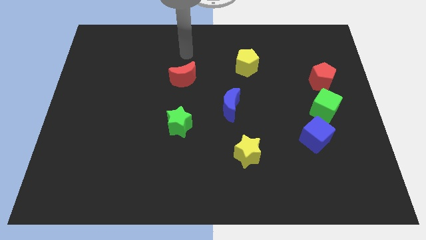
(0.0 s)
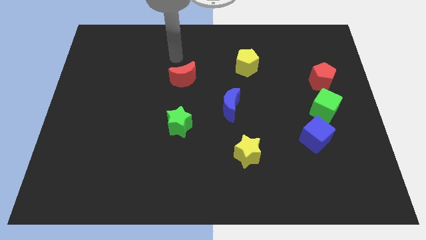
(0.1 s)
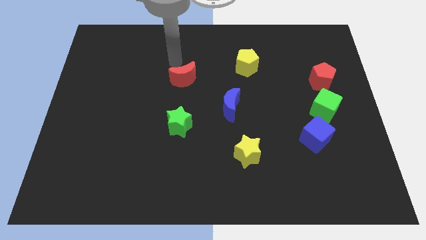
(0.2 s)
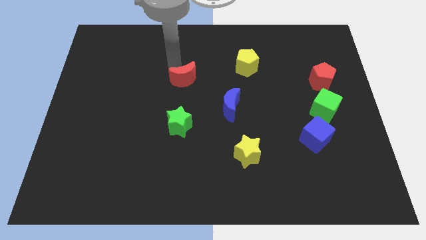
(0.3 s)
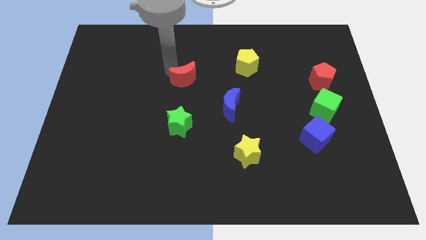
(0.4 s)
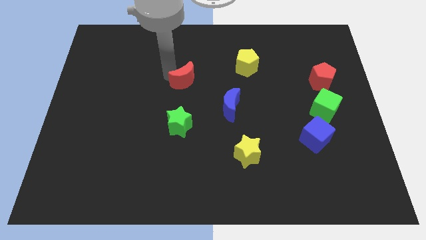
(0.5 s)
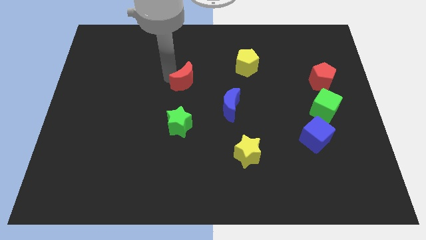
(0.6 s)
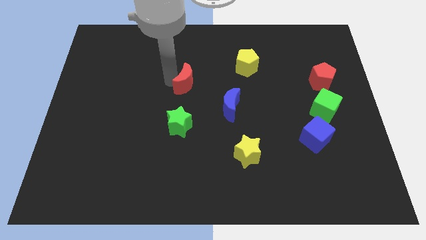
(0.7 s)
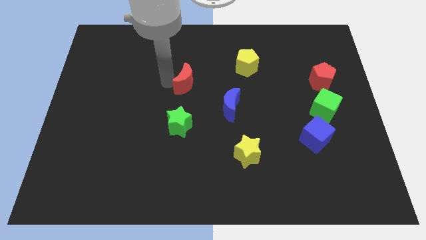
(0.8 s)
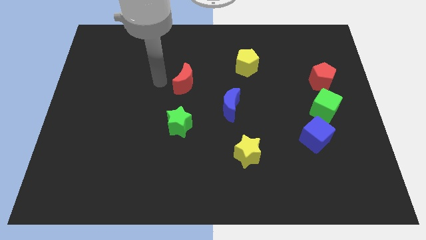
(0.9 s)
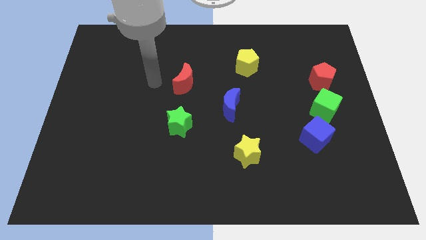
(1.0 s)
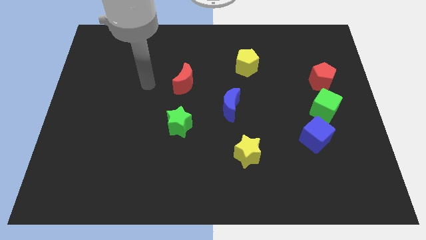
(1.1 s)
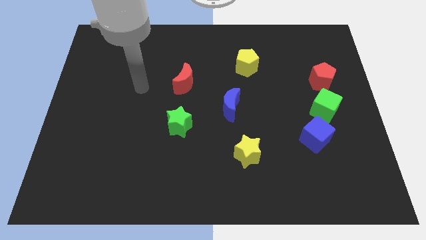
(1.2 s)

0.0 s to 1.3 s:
touch the red moon with your arm

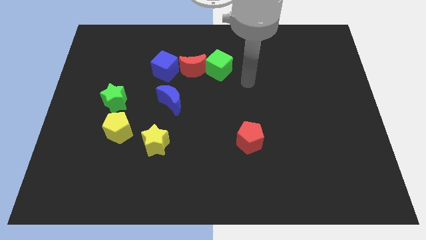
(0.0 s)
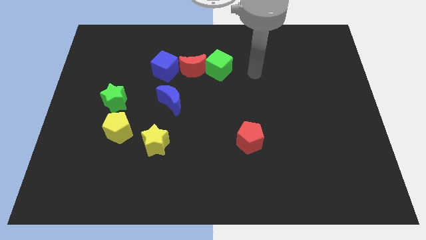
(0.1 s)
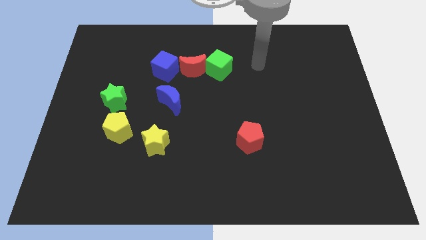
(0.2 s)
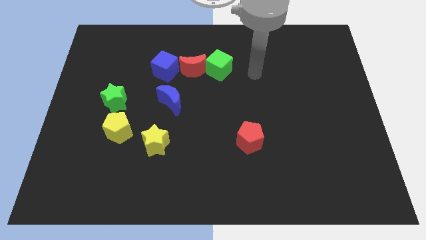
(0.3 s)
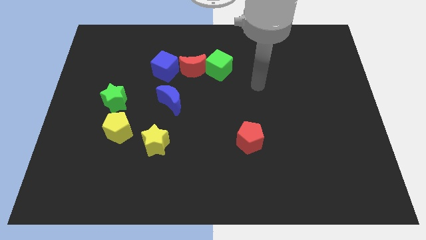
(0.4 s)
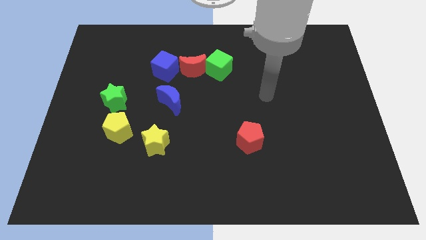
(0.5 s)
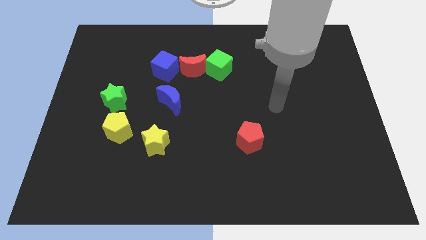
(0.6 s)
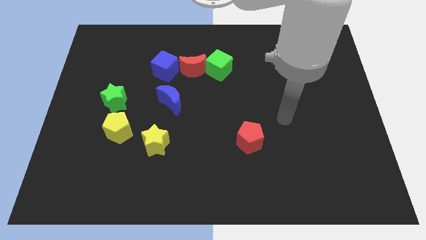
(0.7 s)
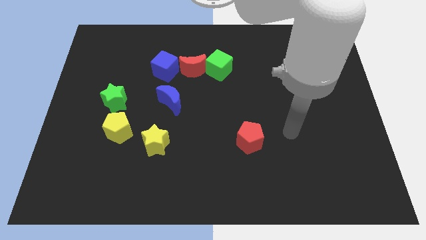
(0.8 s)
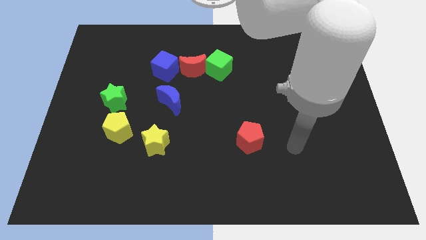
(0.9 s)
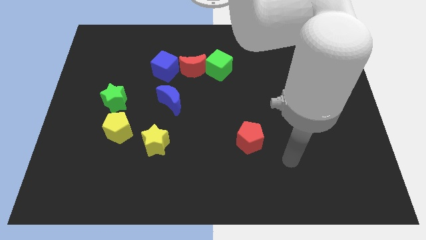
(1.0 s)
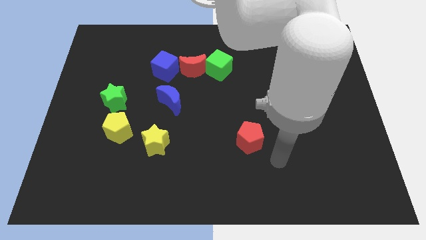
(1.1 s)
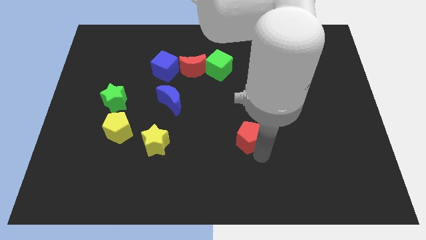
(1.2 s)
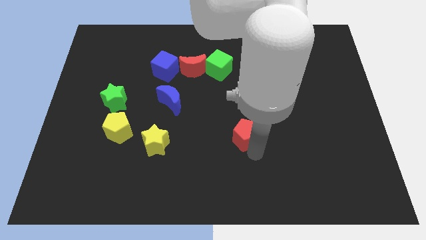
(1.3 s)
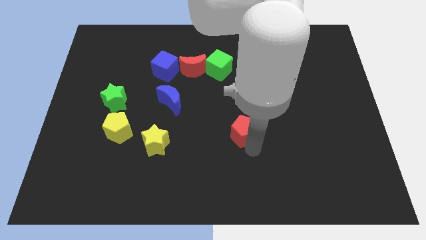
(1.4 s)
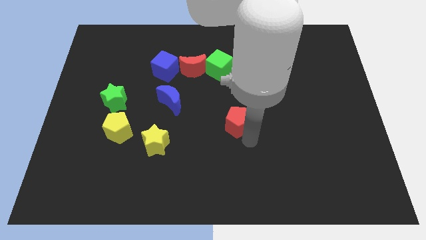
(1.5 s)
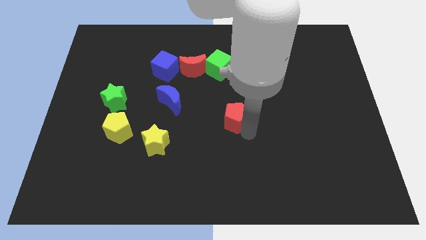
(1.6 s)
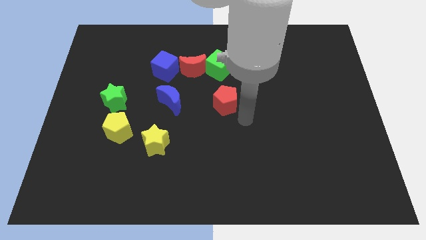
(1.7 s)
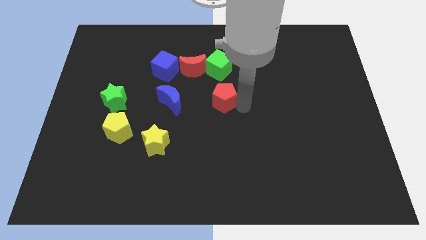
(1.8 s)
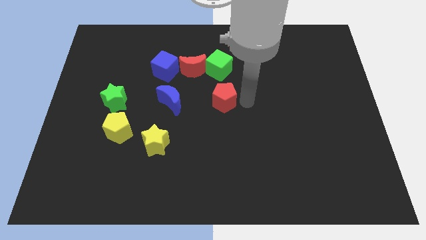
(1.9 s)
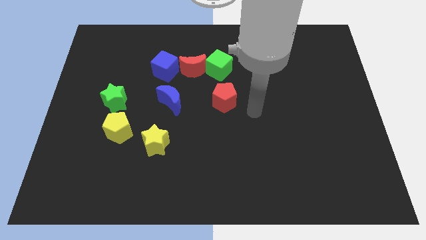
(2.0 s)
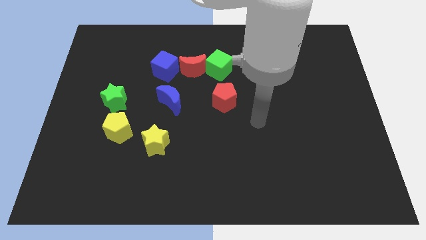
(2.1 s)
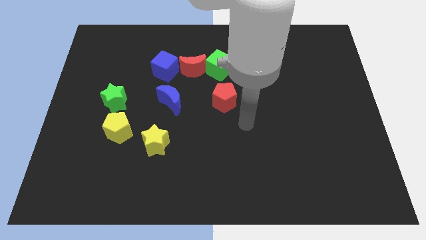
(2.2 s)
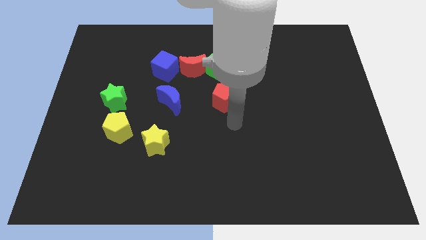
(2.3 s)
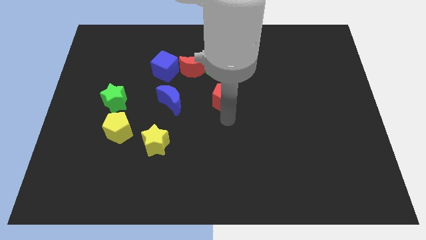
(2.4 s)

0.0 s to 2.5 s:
place the red pentagon right to the blue moon

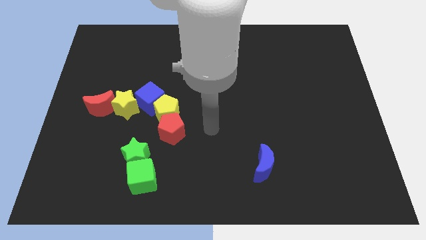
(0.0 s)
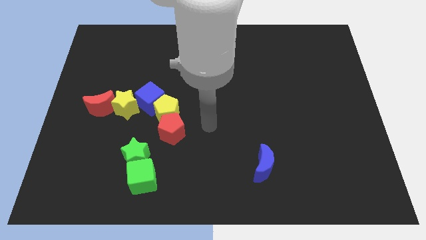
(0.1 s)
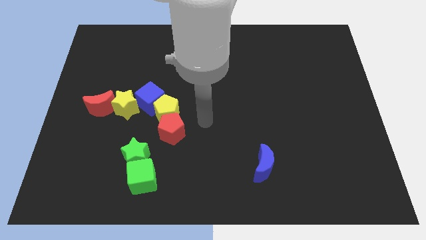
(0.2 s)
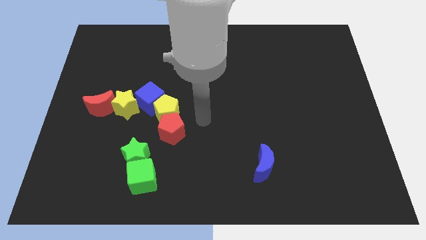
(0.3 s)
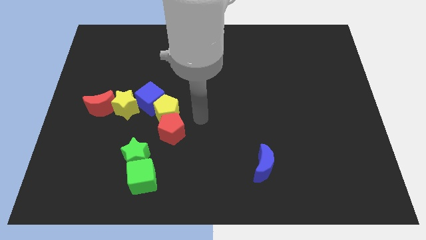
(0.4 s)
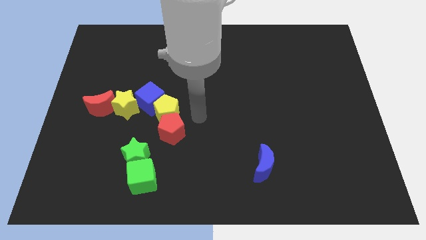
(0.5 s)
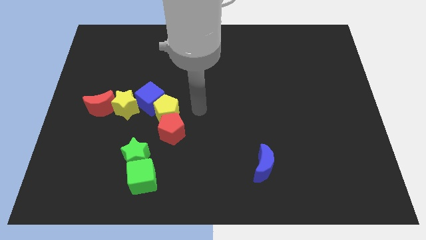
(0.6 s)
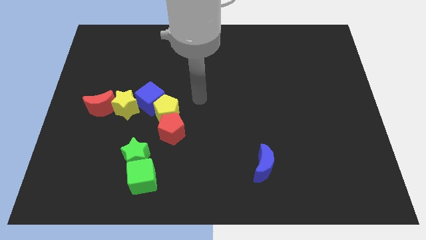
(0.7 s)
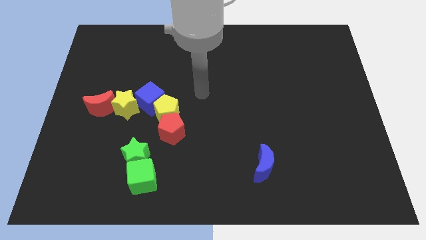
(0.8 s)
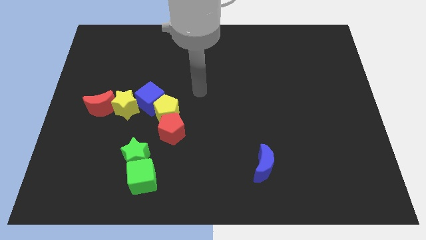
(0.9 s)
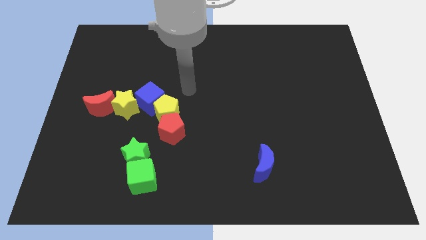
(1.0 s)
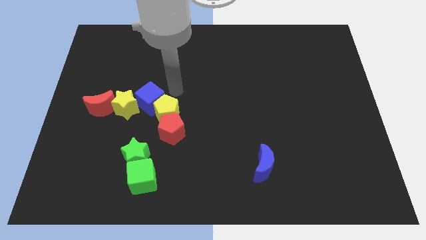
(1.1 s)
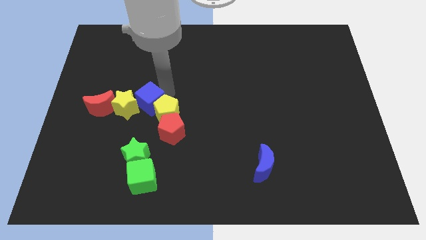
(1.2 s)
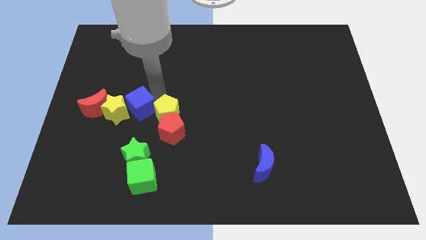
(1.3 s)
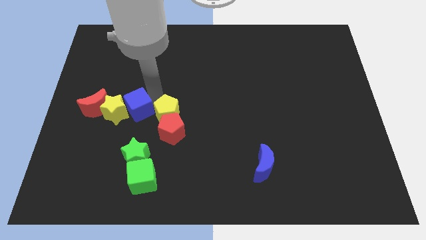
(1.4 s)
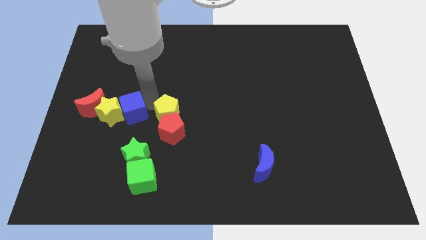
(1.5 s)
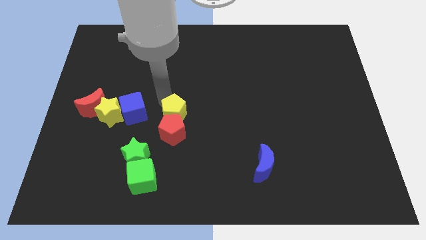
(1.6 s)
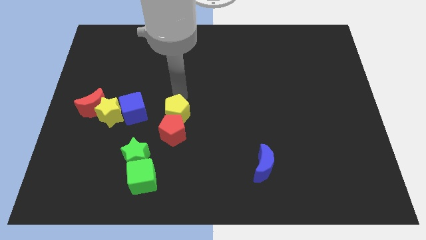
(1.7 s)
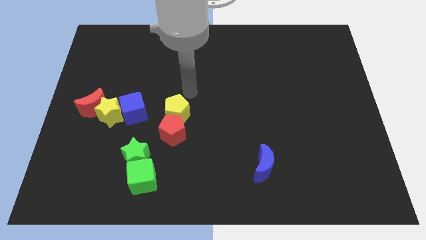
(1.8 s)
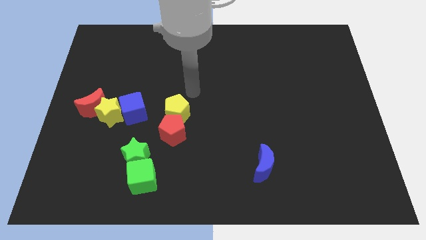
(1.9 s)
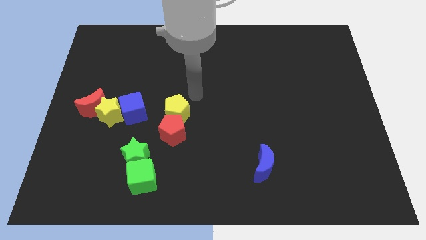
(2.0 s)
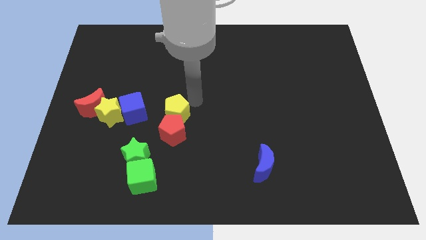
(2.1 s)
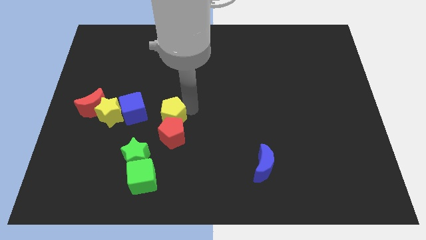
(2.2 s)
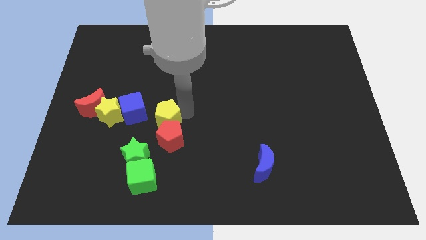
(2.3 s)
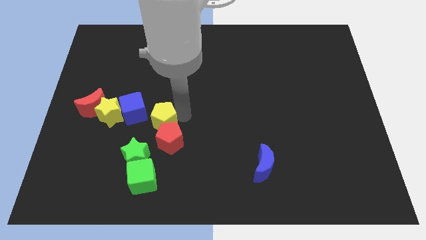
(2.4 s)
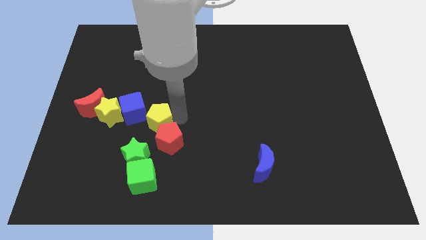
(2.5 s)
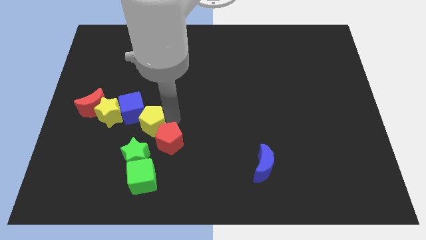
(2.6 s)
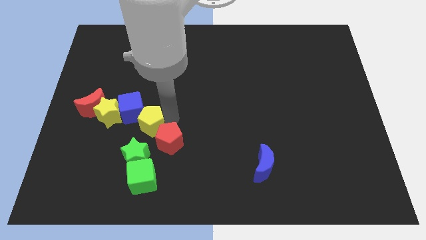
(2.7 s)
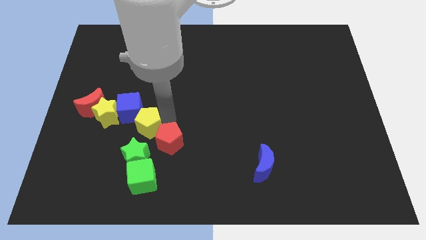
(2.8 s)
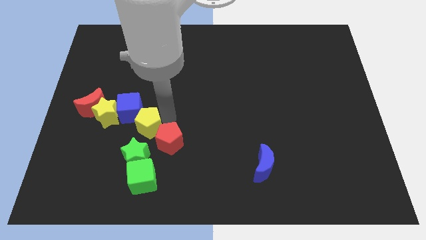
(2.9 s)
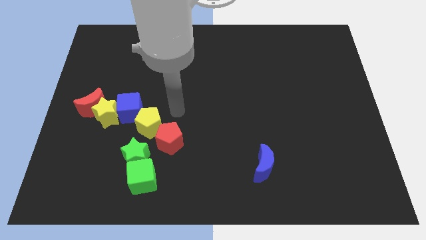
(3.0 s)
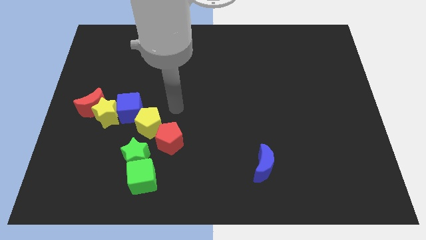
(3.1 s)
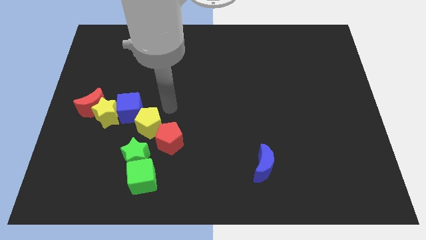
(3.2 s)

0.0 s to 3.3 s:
line up the blue cube yellow pentagon and red pentagon diagonally

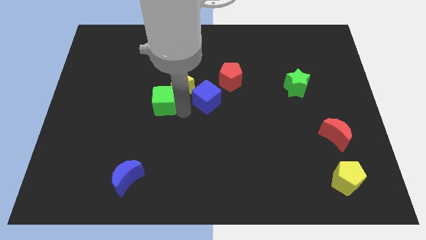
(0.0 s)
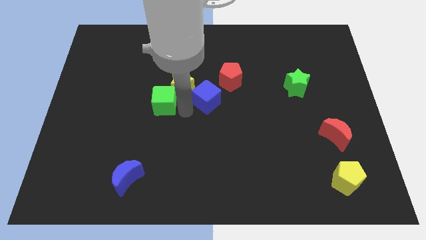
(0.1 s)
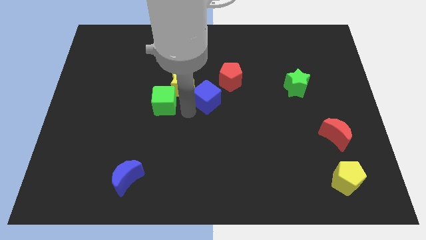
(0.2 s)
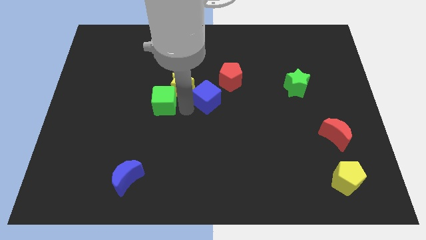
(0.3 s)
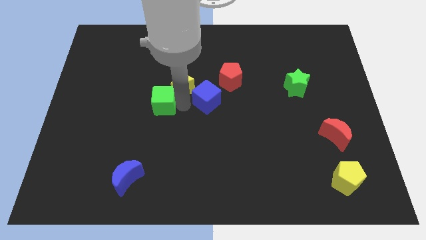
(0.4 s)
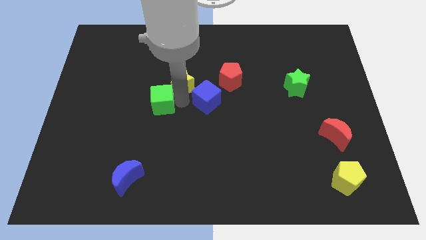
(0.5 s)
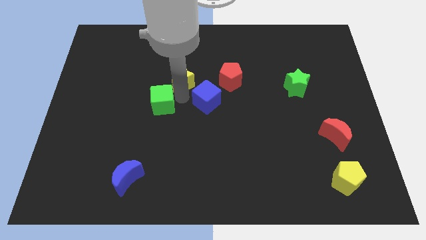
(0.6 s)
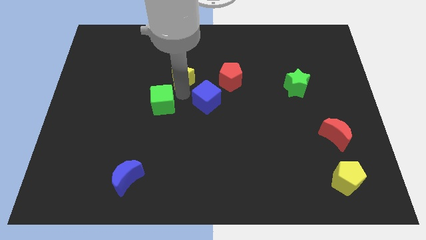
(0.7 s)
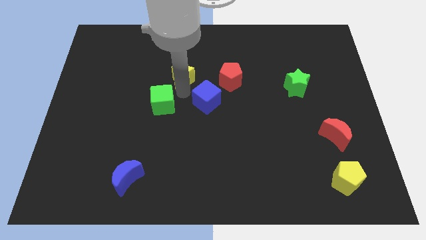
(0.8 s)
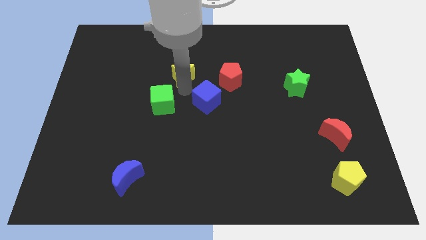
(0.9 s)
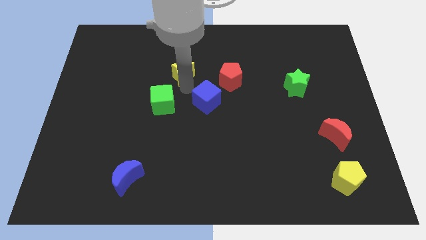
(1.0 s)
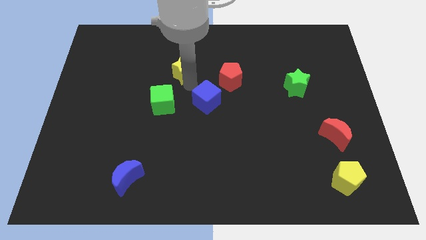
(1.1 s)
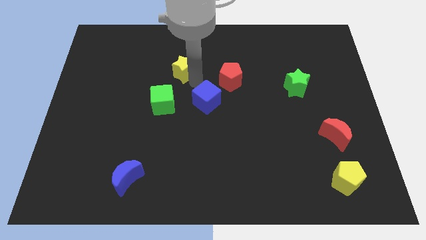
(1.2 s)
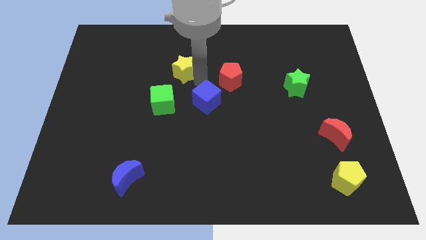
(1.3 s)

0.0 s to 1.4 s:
slightly push the yellow star towards the top of the board

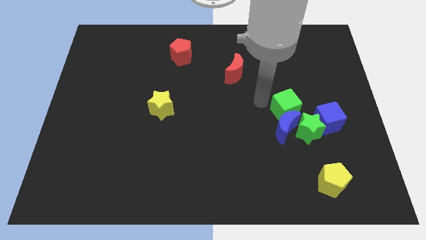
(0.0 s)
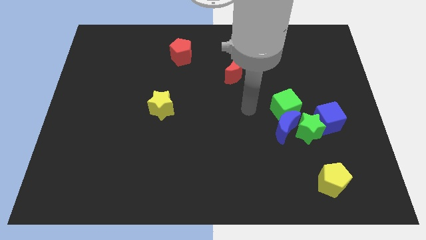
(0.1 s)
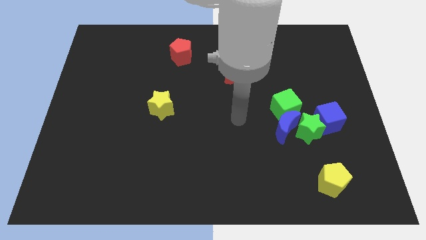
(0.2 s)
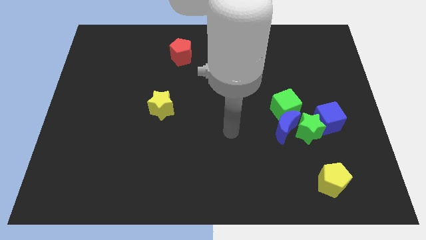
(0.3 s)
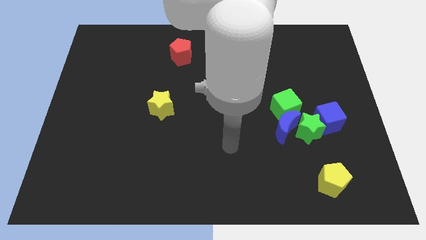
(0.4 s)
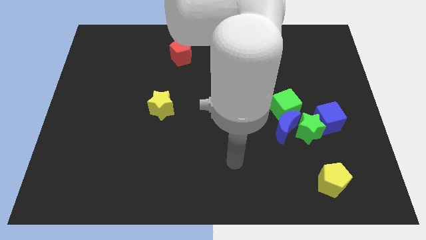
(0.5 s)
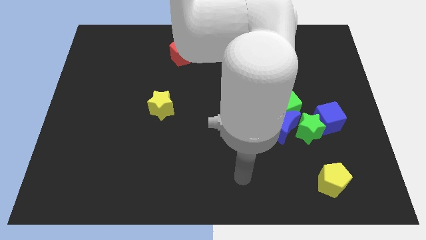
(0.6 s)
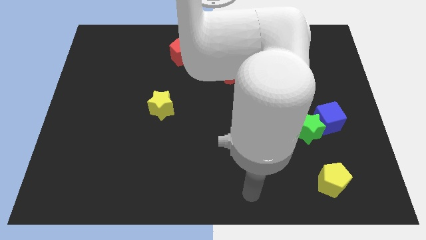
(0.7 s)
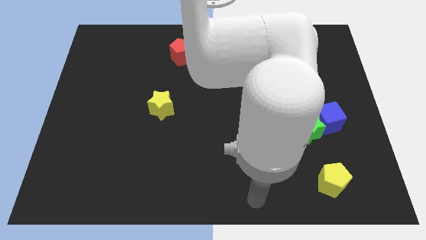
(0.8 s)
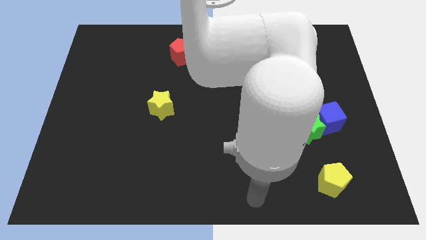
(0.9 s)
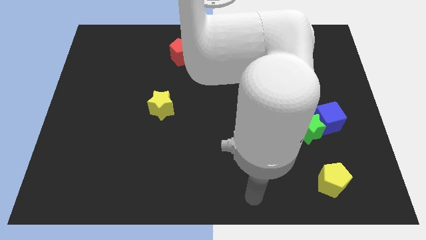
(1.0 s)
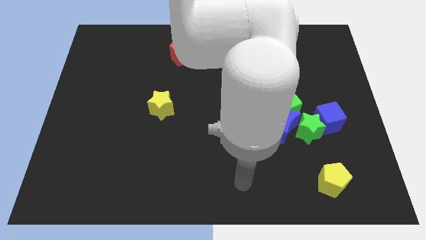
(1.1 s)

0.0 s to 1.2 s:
move your arm to the bottom of the board
